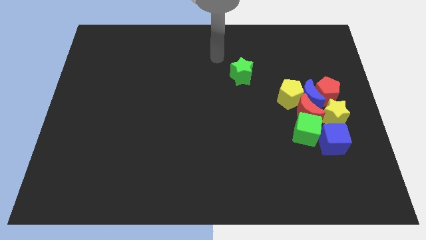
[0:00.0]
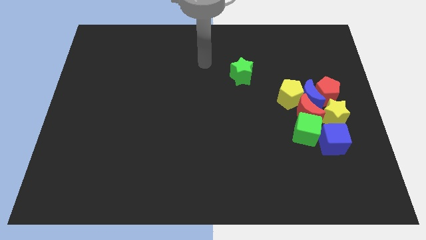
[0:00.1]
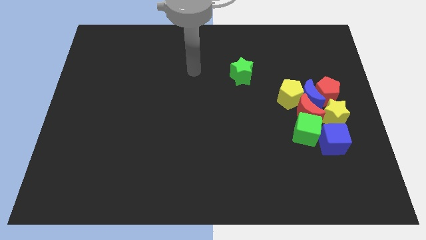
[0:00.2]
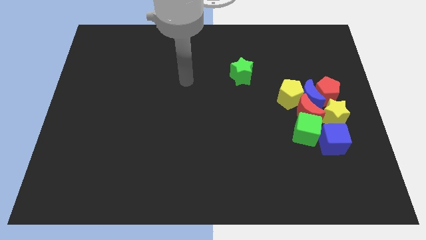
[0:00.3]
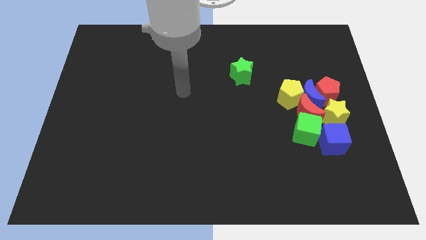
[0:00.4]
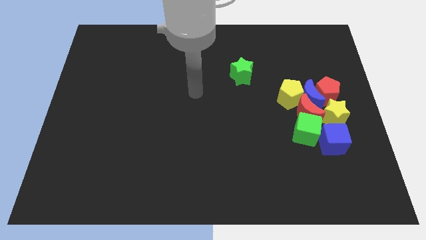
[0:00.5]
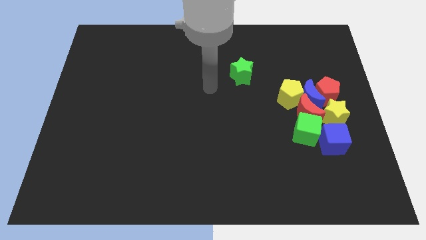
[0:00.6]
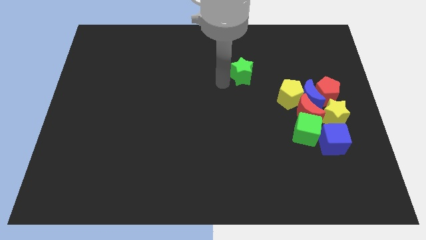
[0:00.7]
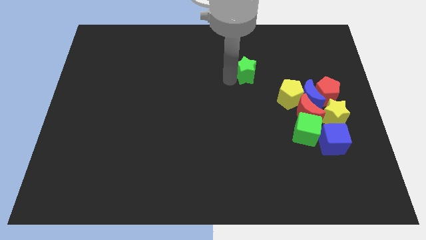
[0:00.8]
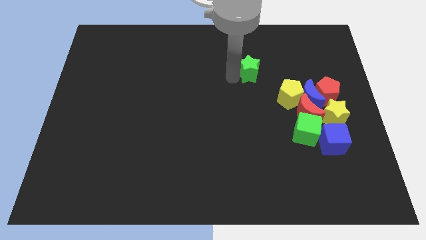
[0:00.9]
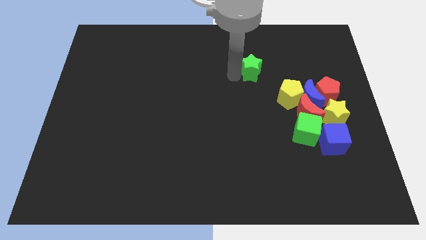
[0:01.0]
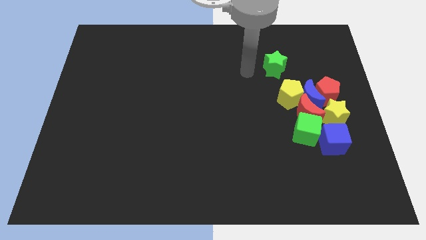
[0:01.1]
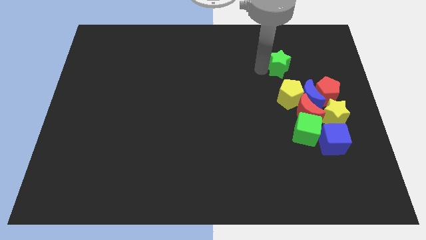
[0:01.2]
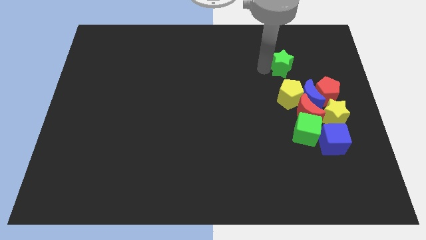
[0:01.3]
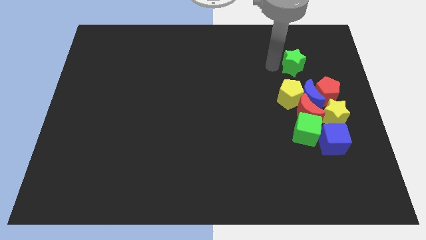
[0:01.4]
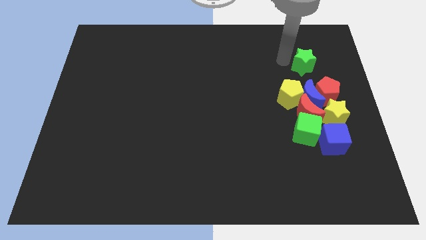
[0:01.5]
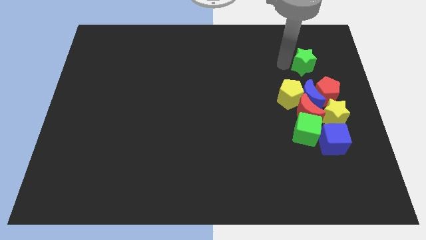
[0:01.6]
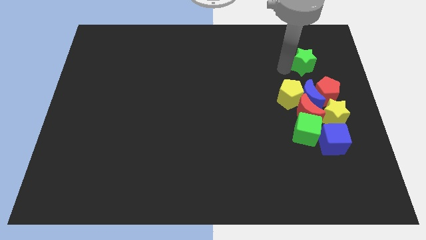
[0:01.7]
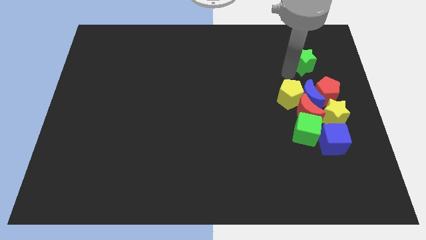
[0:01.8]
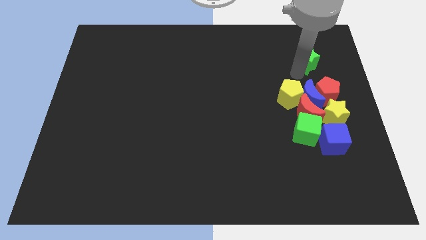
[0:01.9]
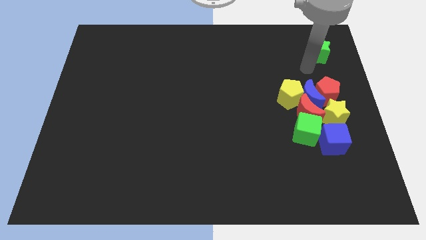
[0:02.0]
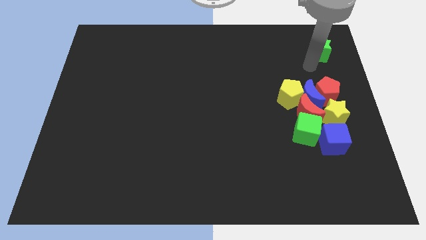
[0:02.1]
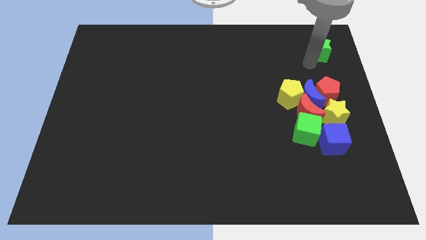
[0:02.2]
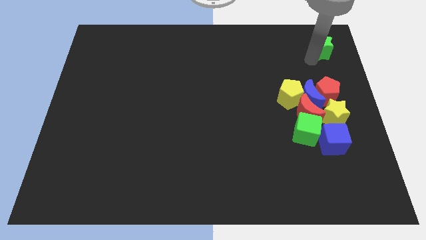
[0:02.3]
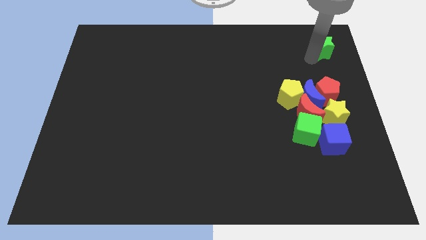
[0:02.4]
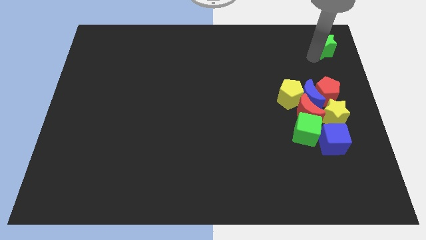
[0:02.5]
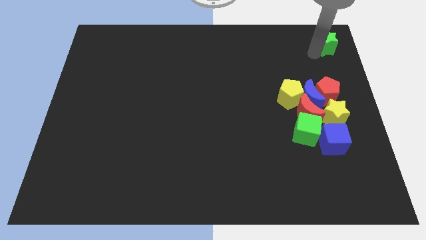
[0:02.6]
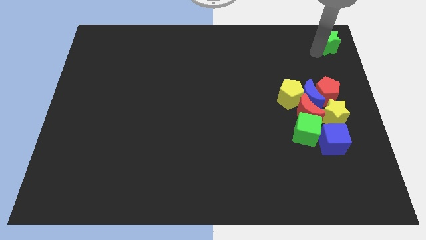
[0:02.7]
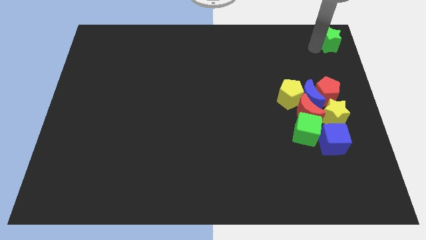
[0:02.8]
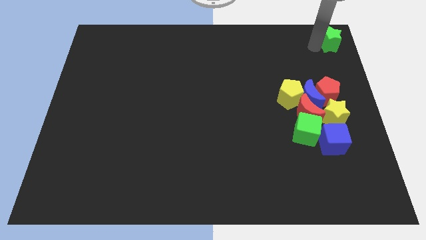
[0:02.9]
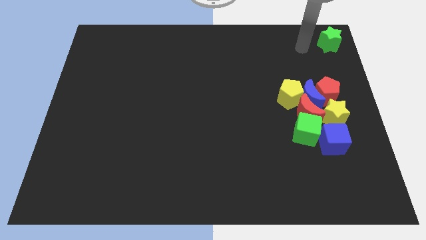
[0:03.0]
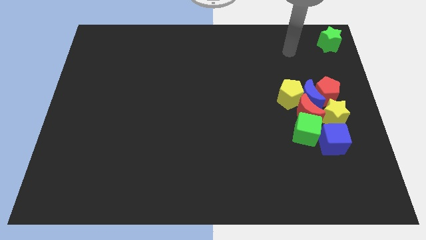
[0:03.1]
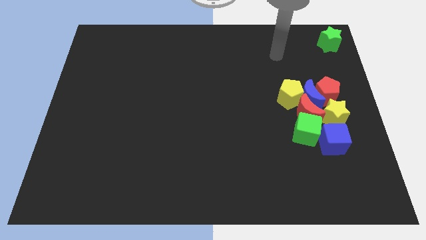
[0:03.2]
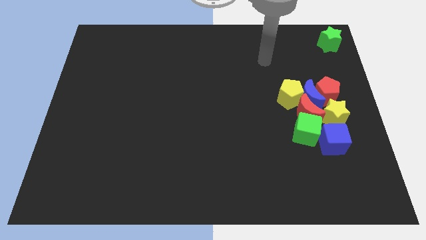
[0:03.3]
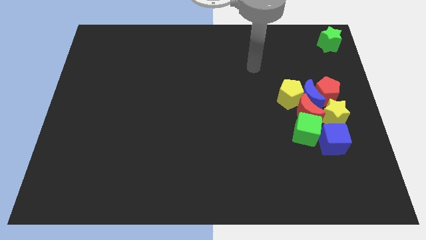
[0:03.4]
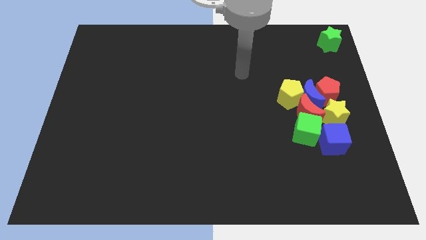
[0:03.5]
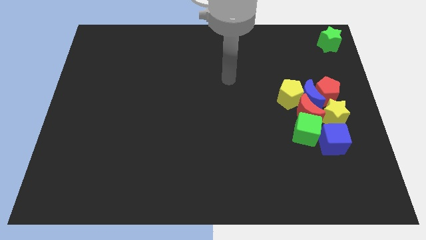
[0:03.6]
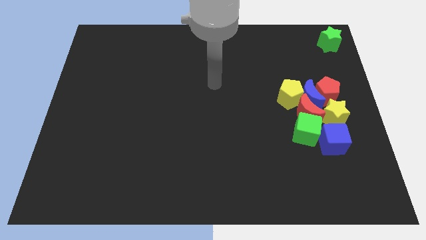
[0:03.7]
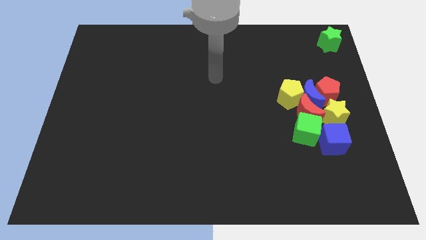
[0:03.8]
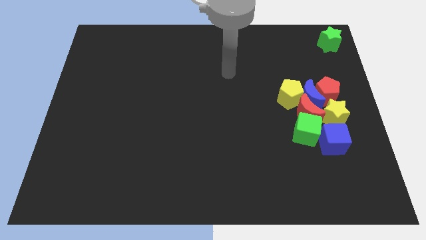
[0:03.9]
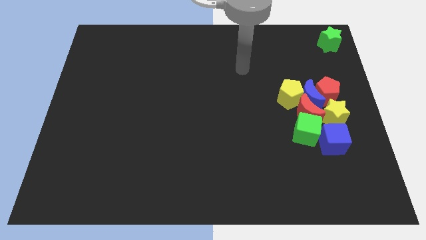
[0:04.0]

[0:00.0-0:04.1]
place the green star at top right corner of the board

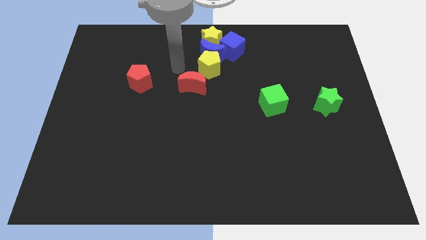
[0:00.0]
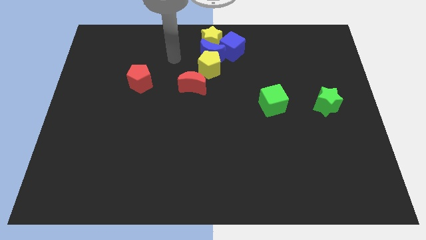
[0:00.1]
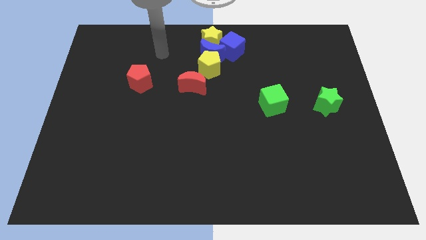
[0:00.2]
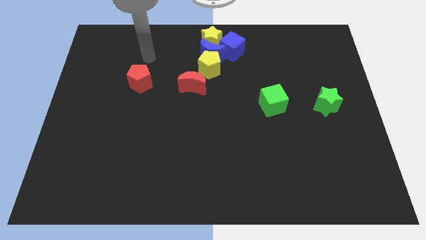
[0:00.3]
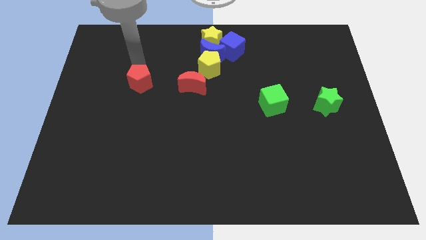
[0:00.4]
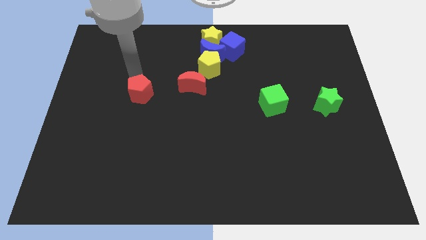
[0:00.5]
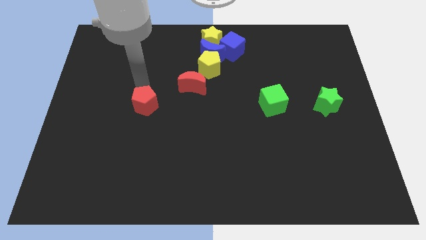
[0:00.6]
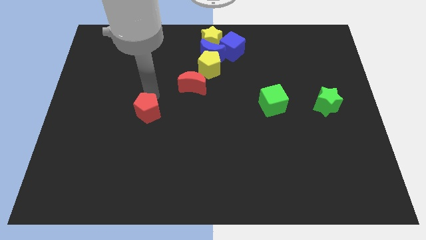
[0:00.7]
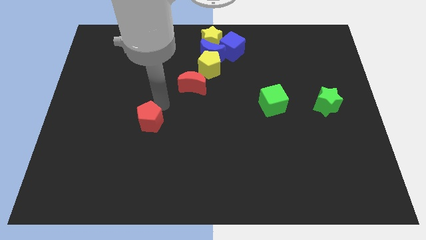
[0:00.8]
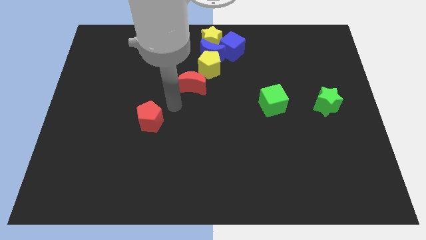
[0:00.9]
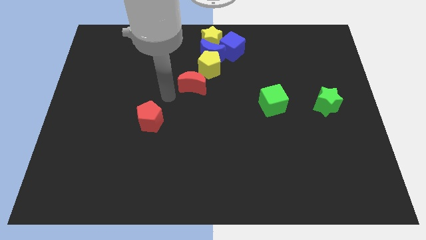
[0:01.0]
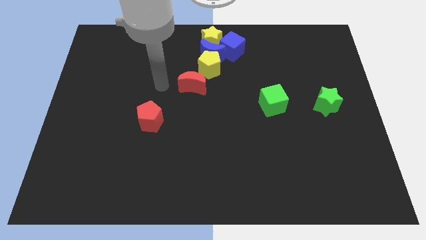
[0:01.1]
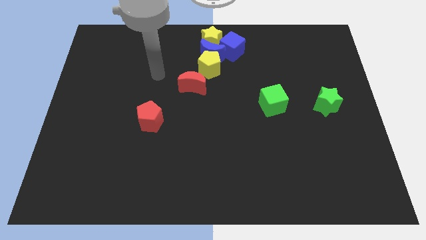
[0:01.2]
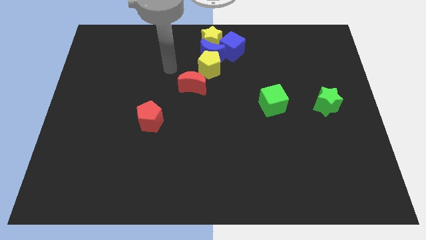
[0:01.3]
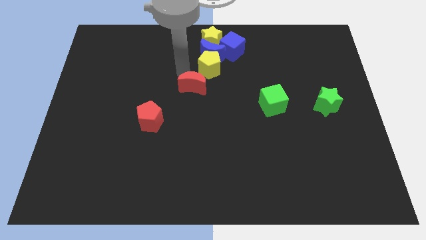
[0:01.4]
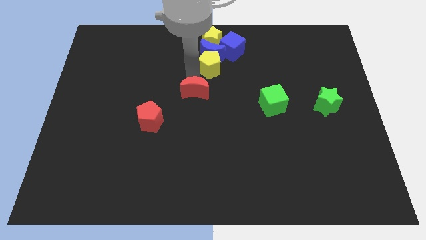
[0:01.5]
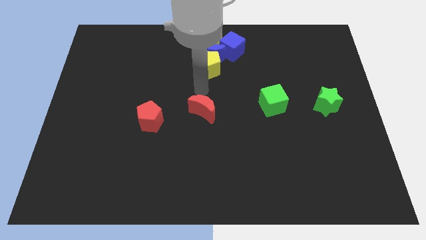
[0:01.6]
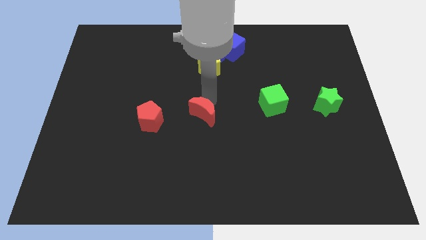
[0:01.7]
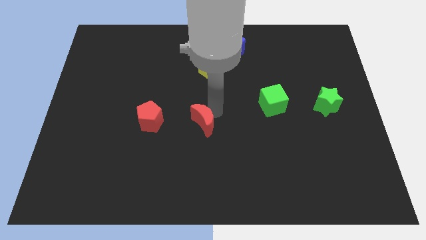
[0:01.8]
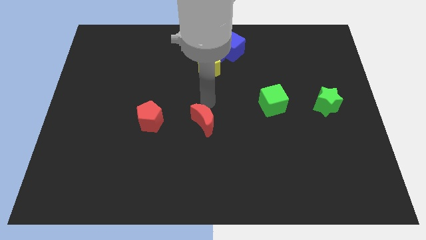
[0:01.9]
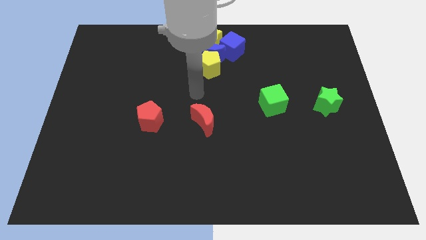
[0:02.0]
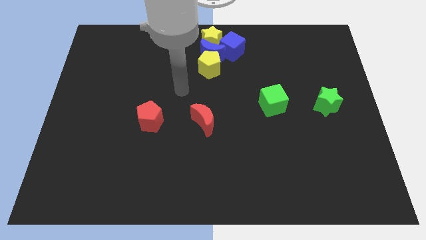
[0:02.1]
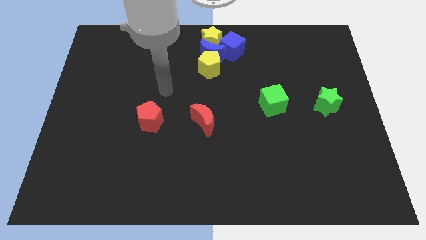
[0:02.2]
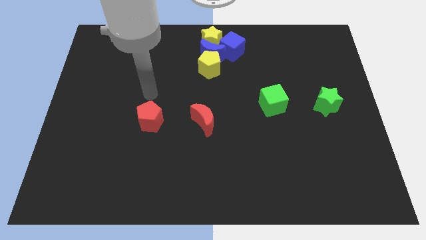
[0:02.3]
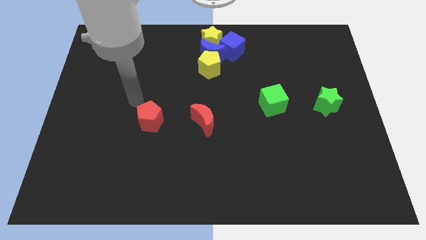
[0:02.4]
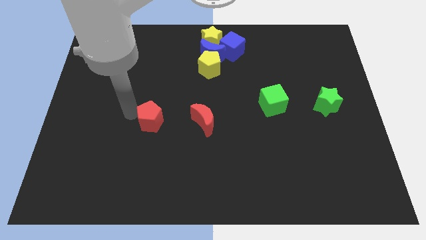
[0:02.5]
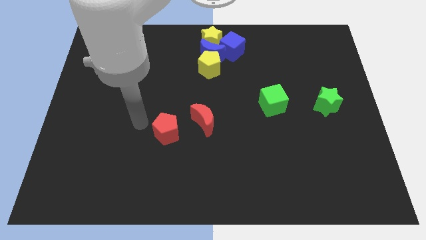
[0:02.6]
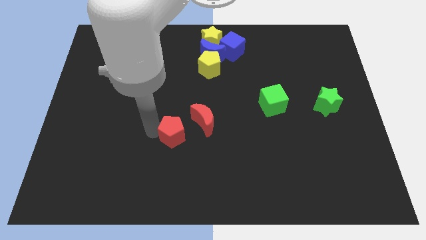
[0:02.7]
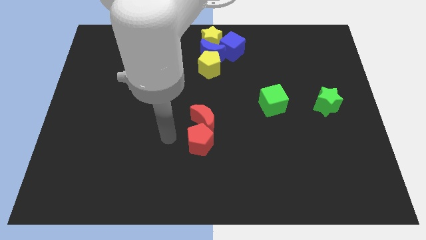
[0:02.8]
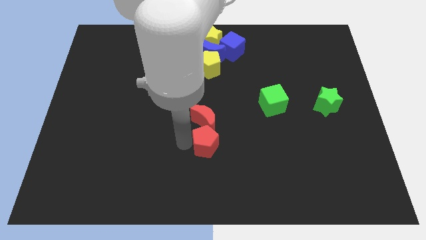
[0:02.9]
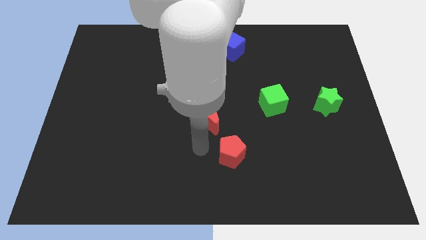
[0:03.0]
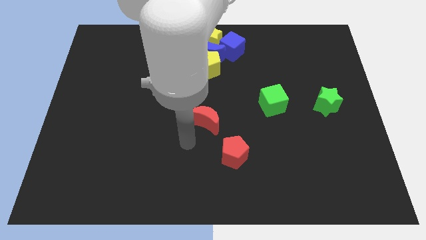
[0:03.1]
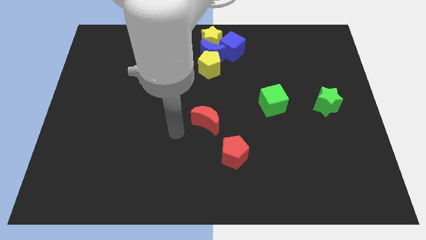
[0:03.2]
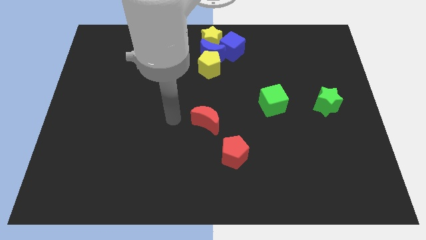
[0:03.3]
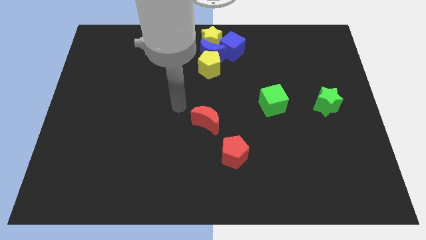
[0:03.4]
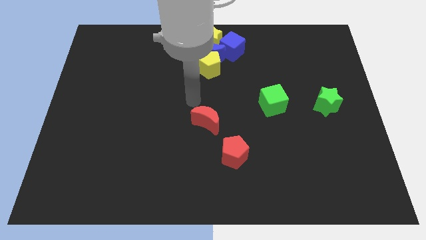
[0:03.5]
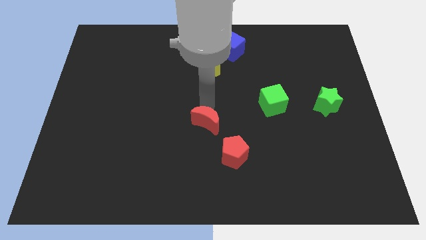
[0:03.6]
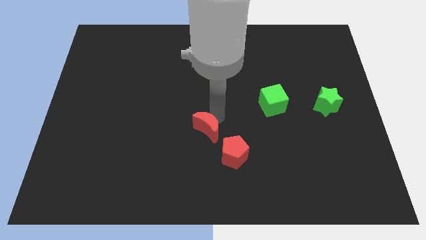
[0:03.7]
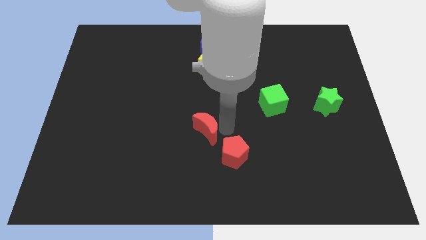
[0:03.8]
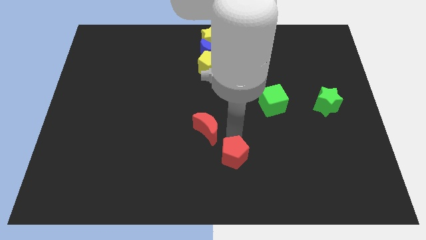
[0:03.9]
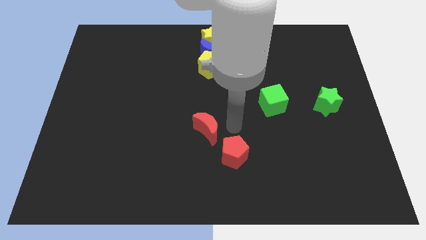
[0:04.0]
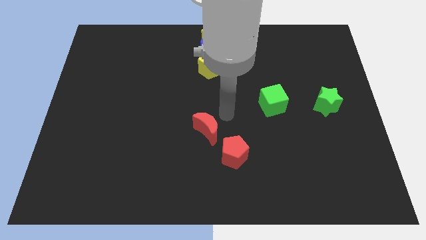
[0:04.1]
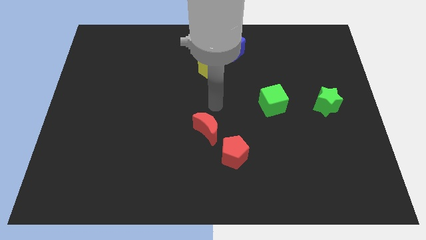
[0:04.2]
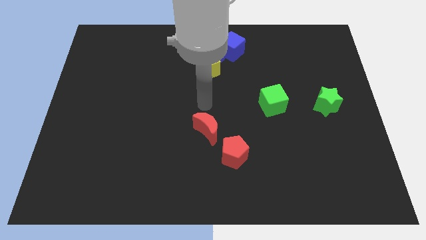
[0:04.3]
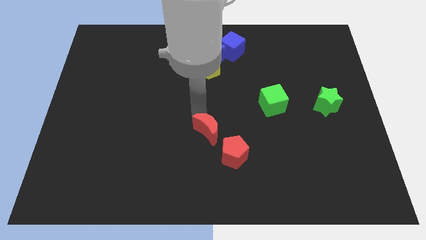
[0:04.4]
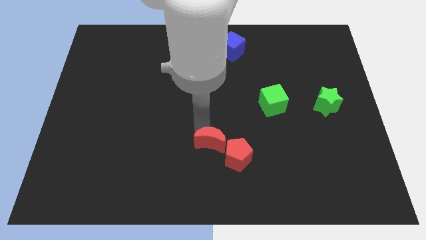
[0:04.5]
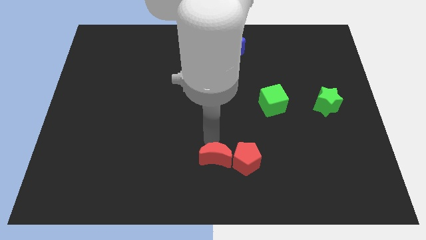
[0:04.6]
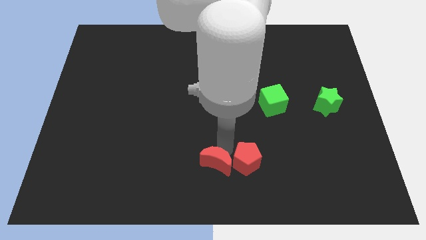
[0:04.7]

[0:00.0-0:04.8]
slide the red blocks to the bottom side of the table

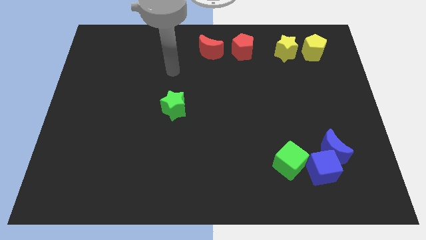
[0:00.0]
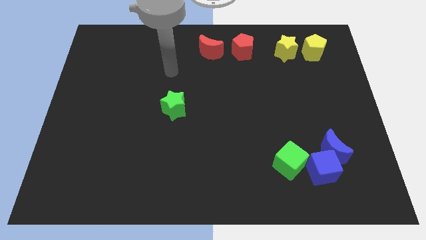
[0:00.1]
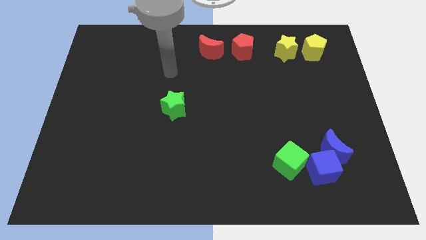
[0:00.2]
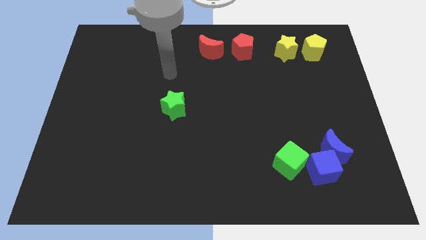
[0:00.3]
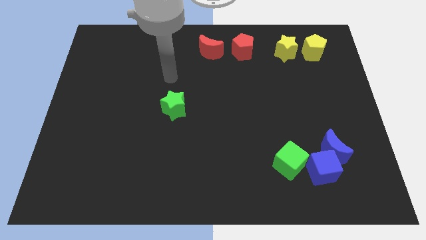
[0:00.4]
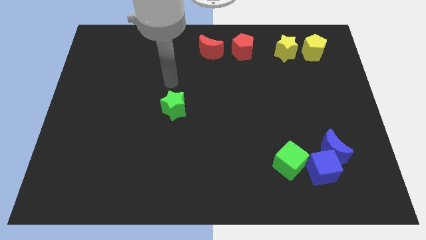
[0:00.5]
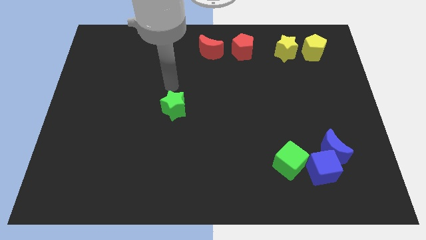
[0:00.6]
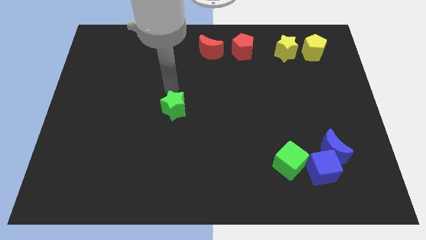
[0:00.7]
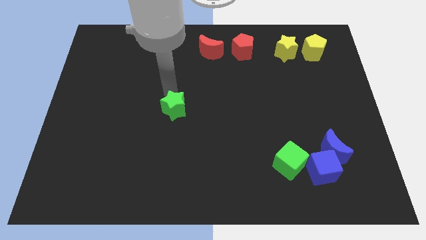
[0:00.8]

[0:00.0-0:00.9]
place your arm above green star
